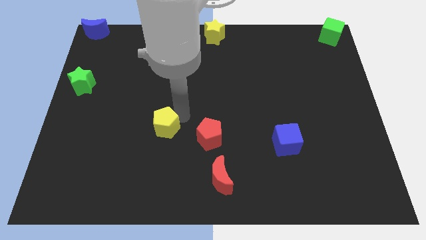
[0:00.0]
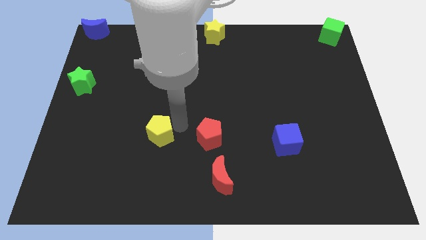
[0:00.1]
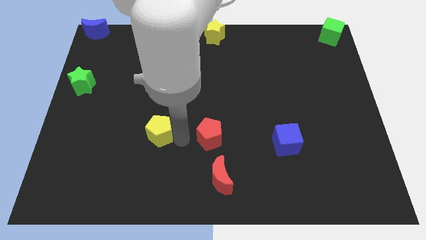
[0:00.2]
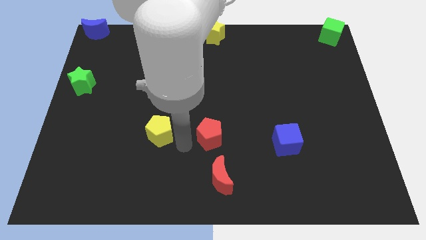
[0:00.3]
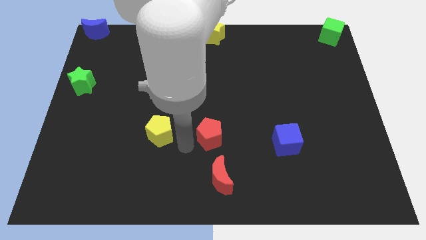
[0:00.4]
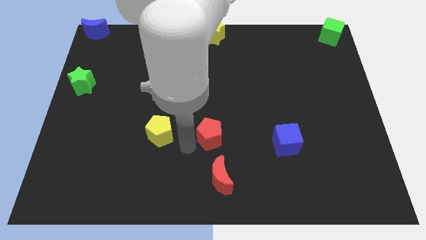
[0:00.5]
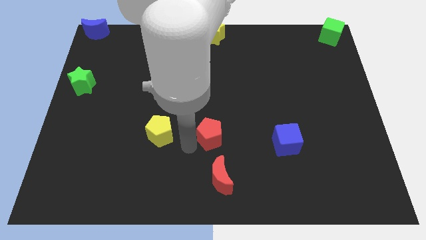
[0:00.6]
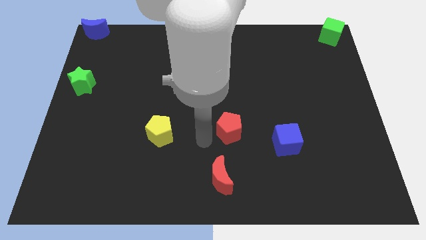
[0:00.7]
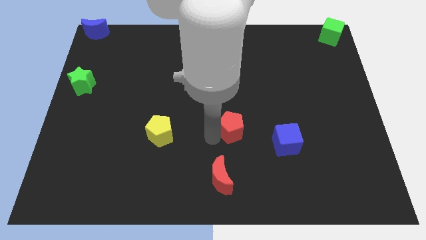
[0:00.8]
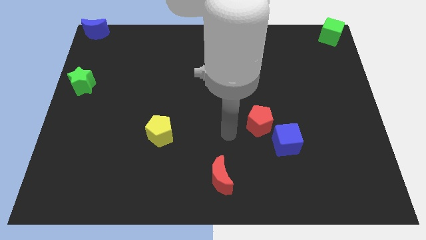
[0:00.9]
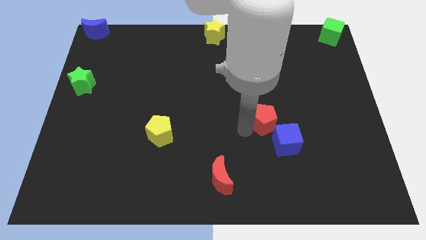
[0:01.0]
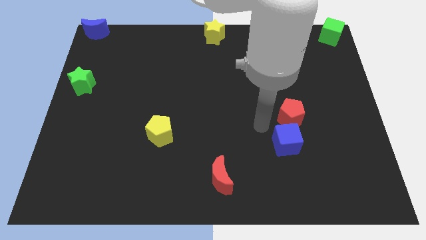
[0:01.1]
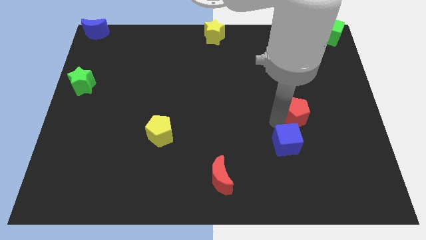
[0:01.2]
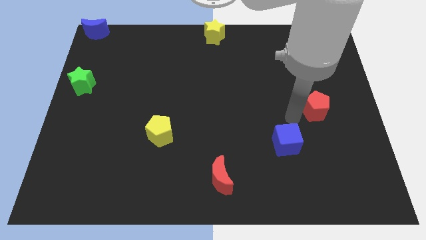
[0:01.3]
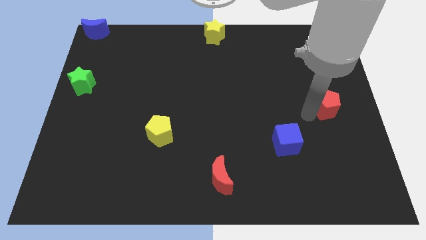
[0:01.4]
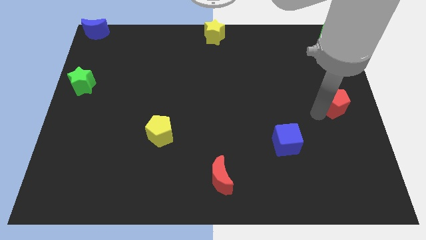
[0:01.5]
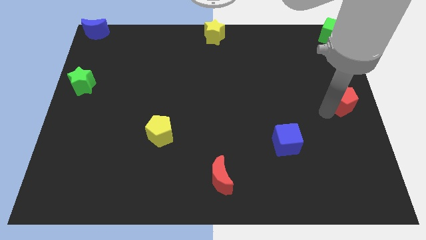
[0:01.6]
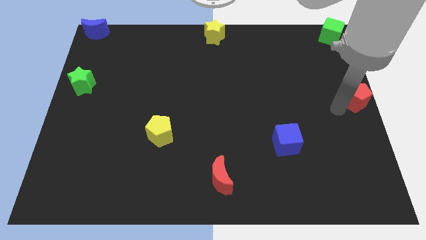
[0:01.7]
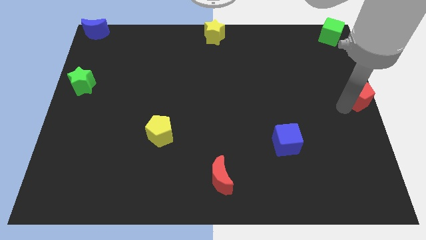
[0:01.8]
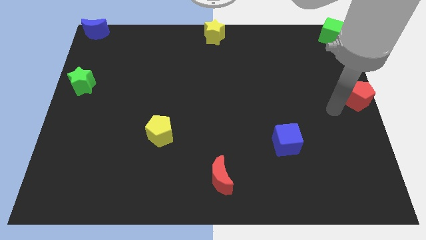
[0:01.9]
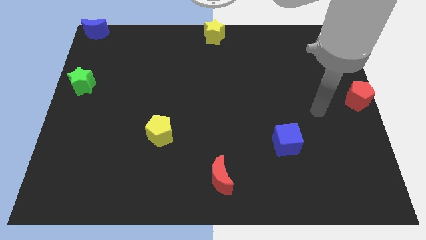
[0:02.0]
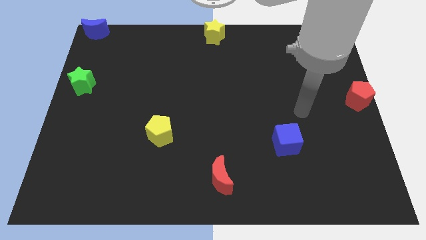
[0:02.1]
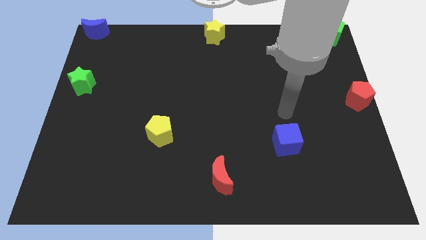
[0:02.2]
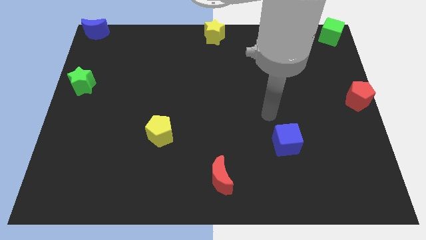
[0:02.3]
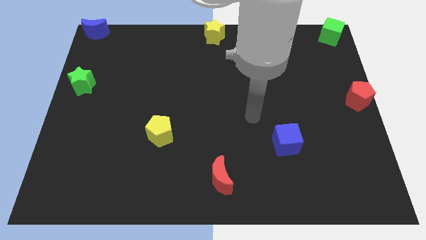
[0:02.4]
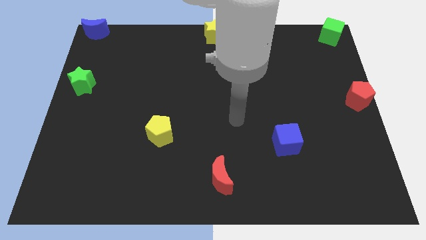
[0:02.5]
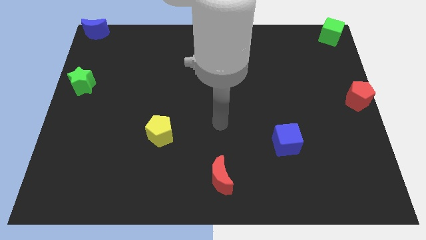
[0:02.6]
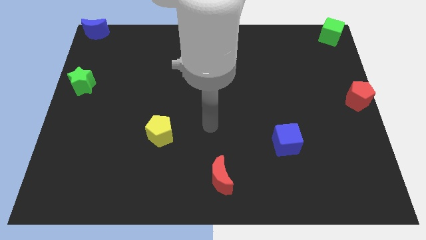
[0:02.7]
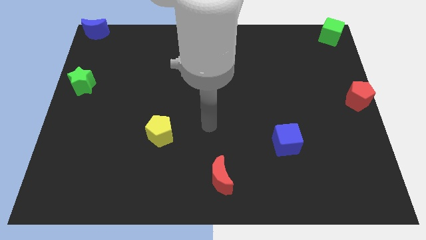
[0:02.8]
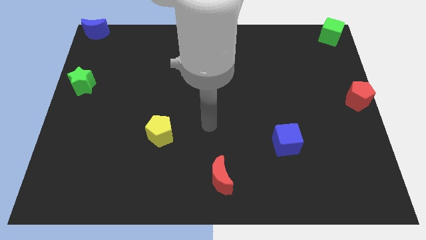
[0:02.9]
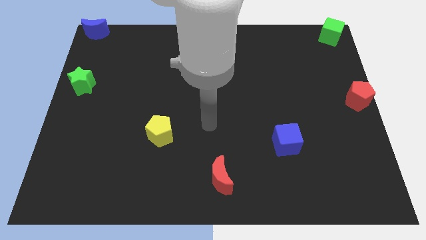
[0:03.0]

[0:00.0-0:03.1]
push the red pentagon to the middle right of the board

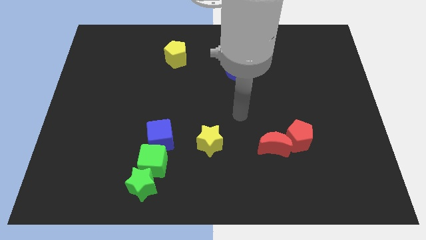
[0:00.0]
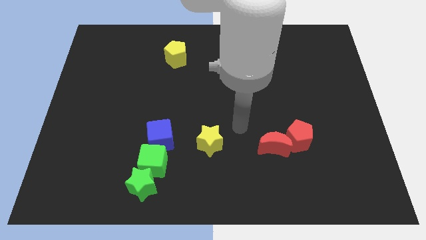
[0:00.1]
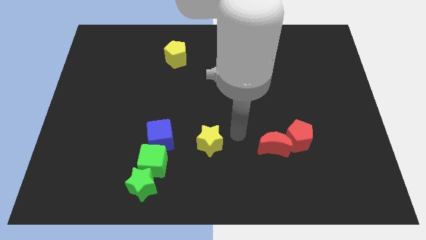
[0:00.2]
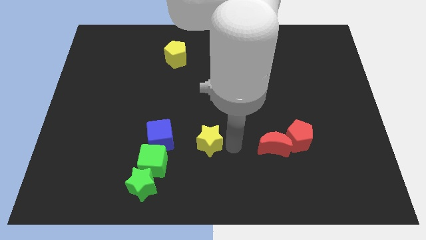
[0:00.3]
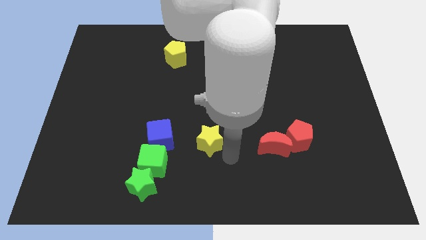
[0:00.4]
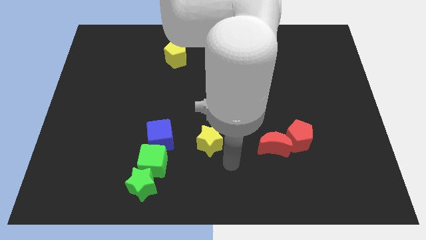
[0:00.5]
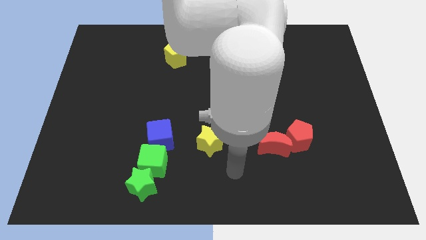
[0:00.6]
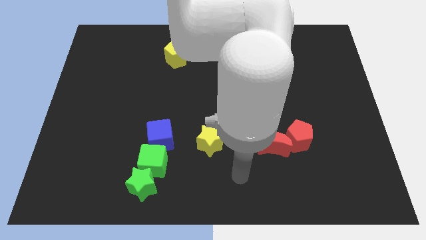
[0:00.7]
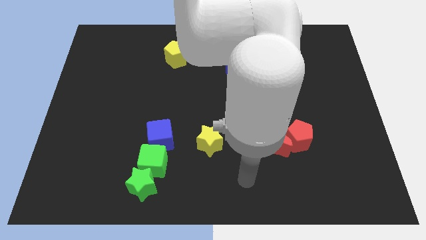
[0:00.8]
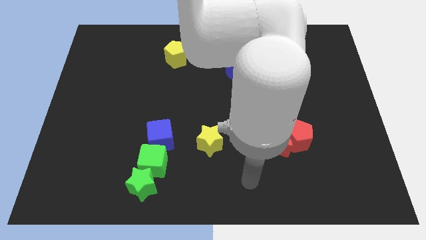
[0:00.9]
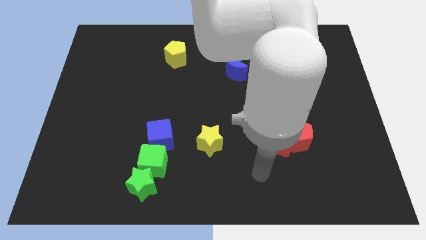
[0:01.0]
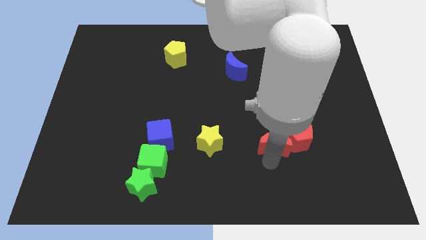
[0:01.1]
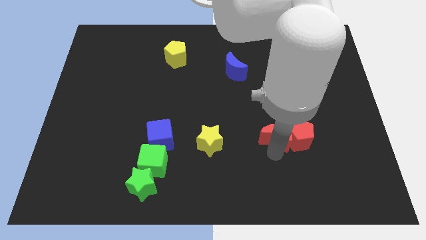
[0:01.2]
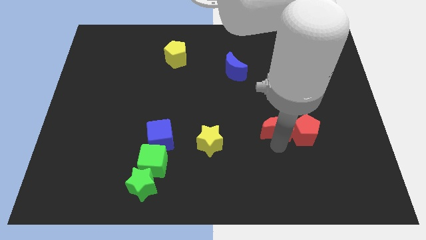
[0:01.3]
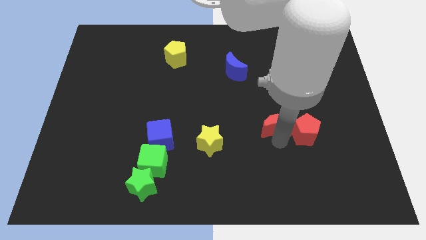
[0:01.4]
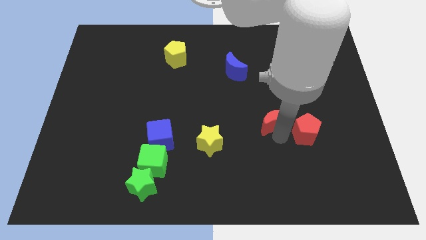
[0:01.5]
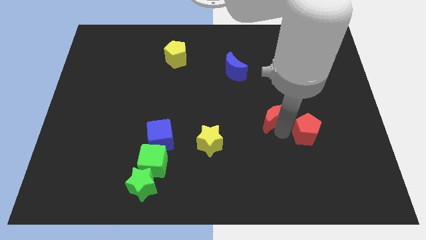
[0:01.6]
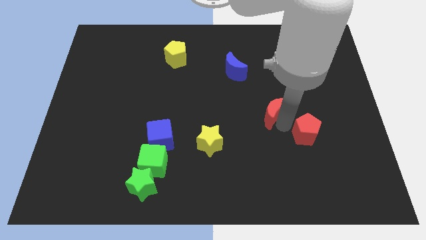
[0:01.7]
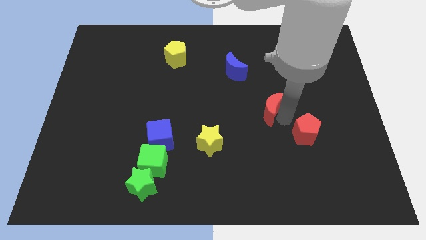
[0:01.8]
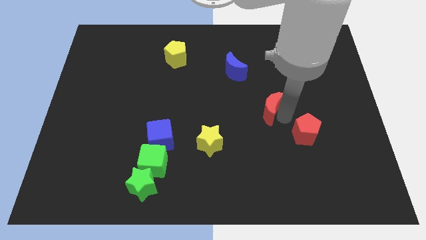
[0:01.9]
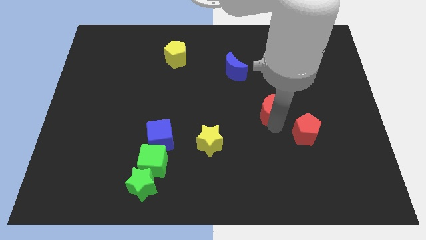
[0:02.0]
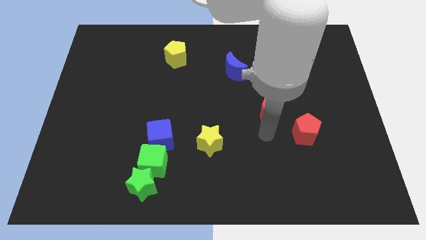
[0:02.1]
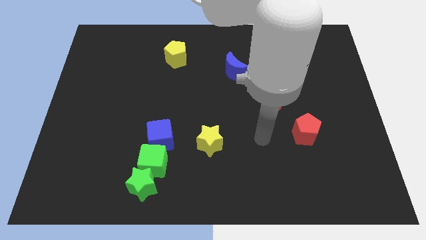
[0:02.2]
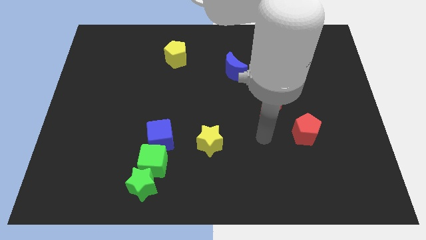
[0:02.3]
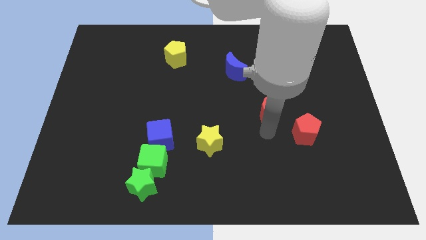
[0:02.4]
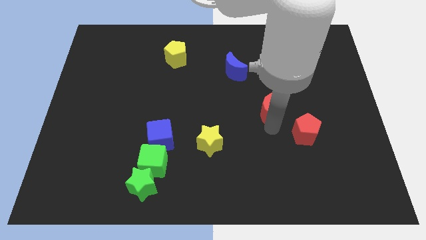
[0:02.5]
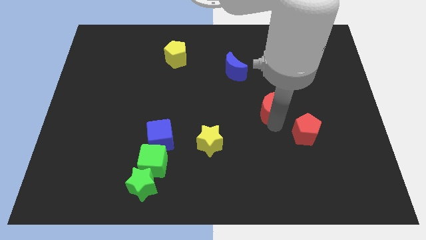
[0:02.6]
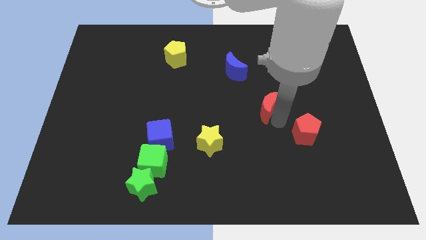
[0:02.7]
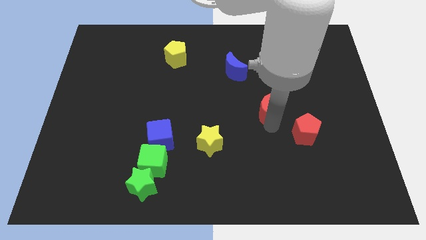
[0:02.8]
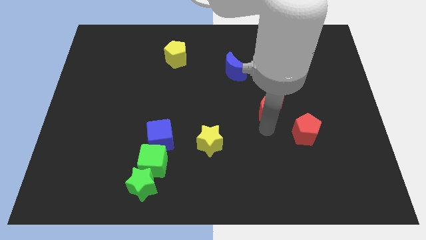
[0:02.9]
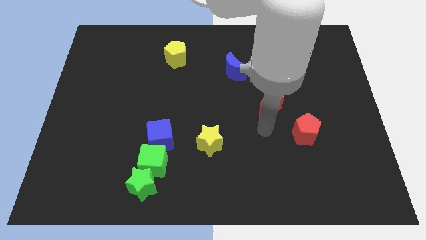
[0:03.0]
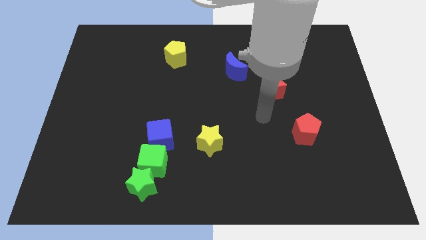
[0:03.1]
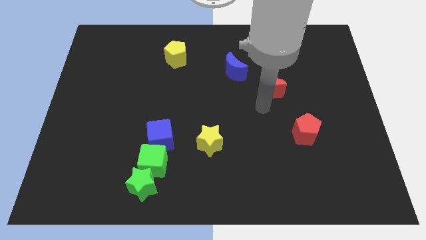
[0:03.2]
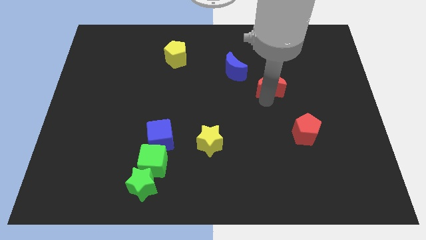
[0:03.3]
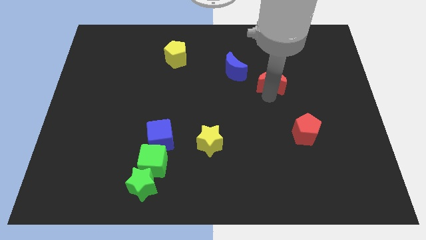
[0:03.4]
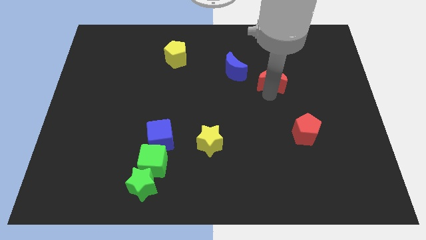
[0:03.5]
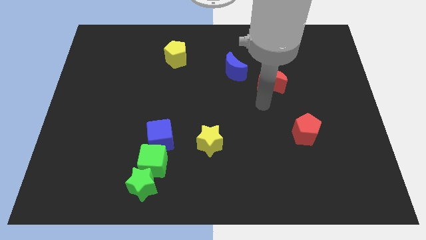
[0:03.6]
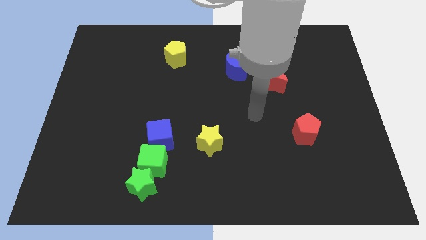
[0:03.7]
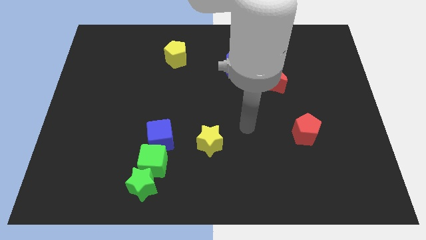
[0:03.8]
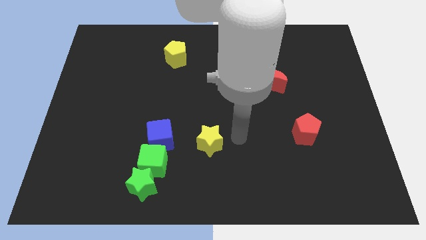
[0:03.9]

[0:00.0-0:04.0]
separate the red moon from the red pentagon

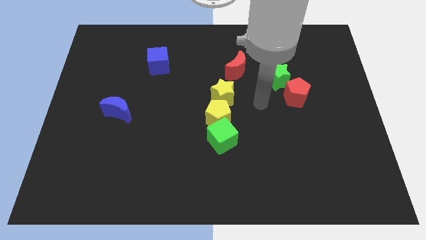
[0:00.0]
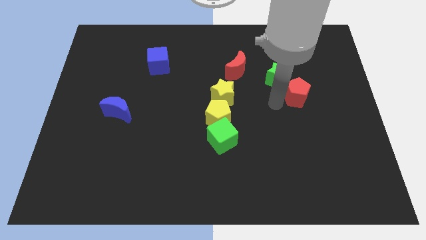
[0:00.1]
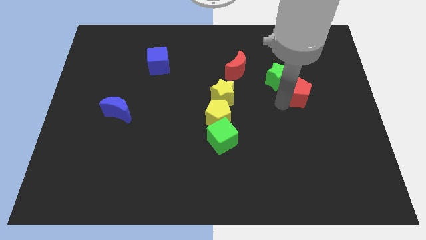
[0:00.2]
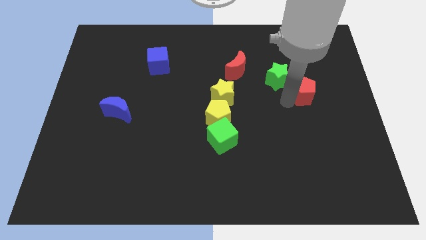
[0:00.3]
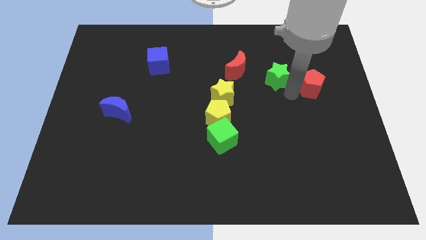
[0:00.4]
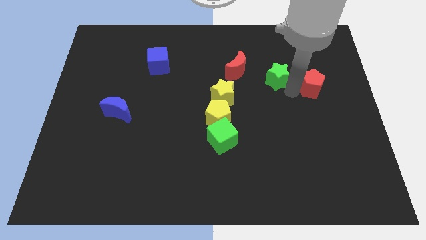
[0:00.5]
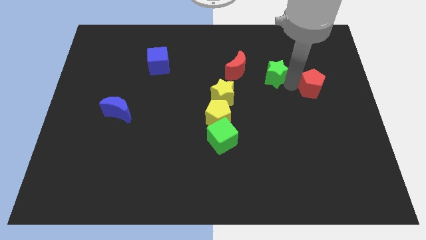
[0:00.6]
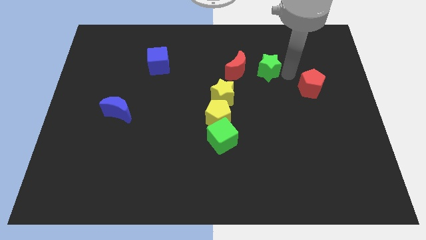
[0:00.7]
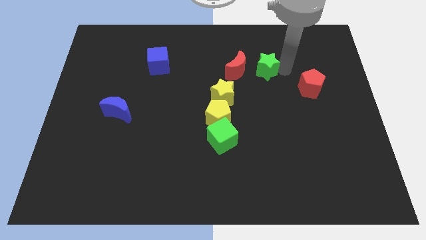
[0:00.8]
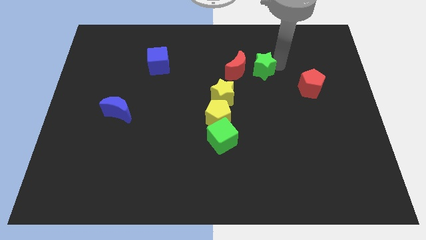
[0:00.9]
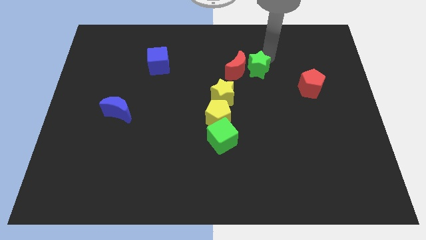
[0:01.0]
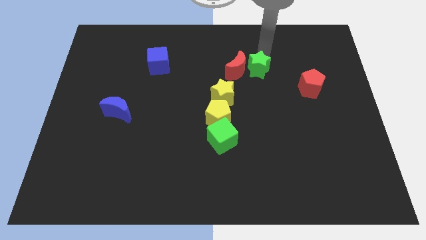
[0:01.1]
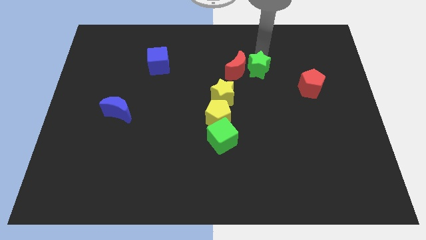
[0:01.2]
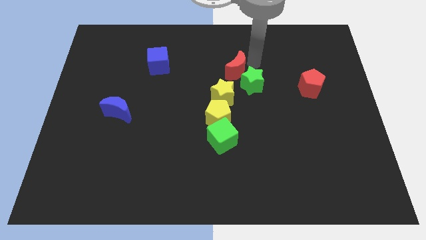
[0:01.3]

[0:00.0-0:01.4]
separate green star and red pentagon

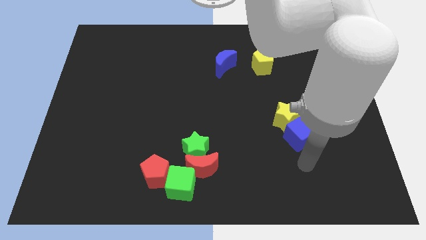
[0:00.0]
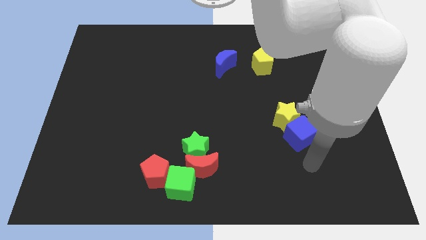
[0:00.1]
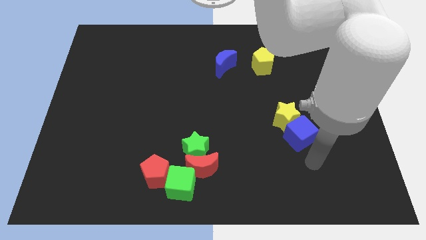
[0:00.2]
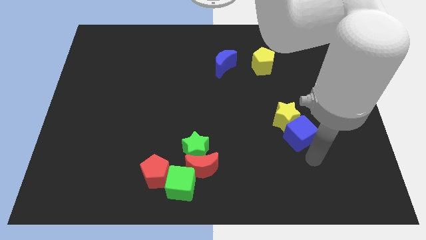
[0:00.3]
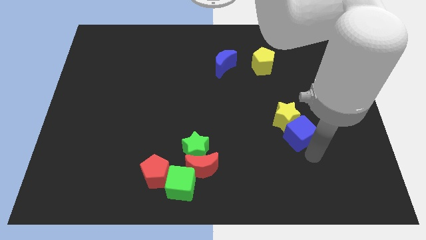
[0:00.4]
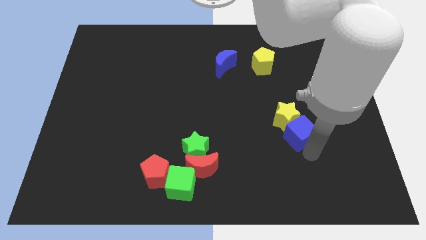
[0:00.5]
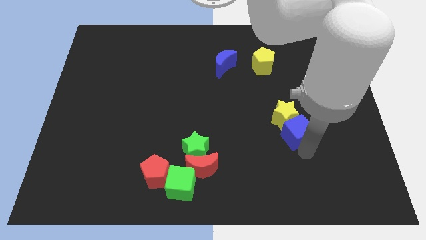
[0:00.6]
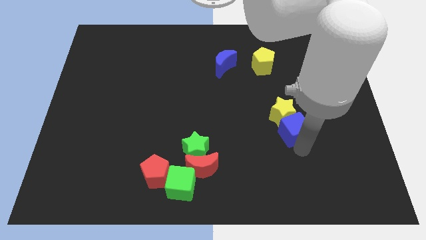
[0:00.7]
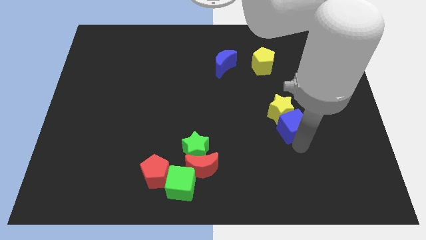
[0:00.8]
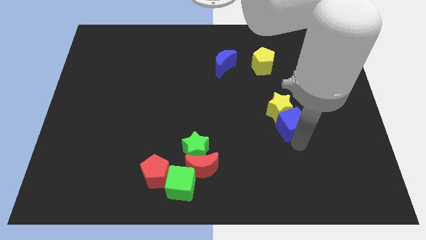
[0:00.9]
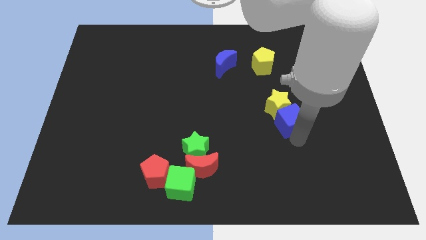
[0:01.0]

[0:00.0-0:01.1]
push the blue cube into the yellow star
